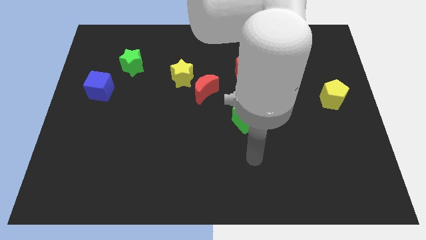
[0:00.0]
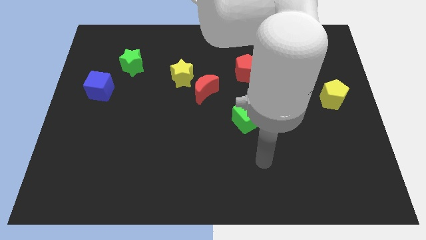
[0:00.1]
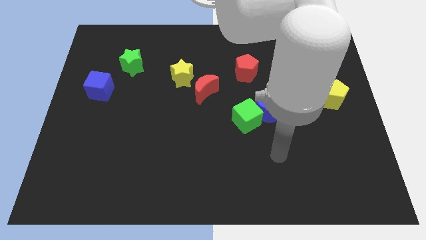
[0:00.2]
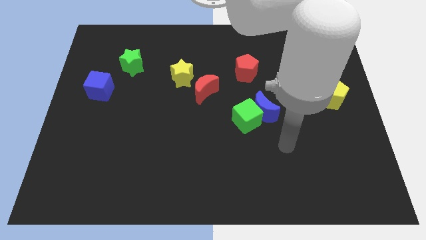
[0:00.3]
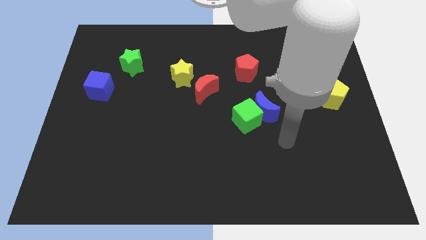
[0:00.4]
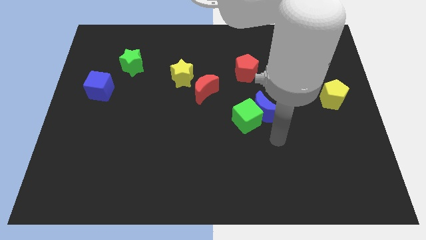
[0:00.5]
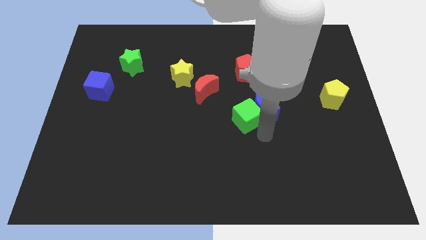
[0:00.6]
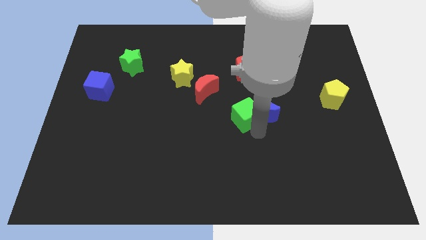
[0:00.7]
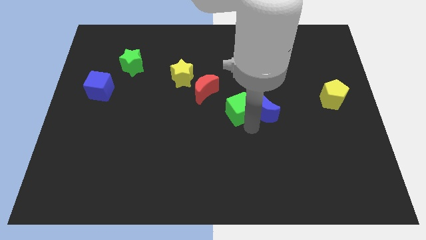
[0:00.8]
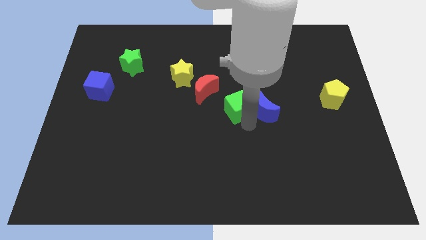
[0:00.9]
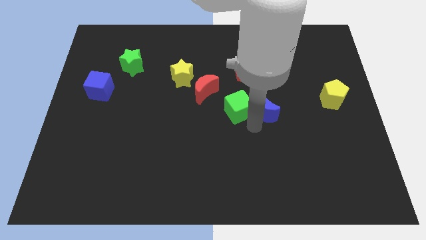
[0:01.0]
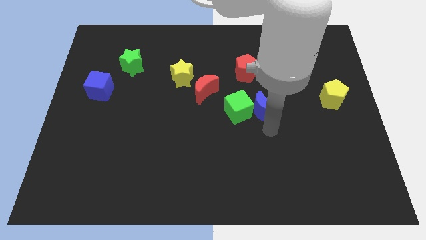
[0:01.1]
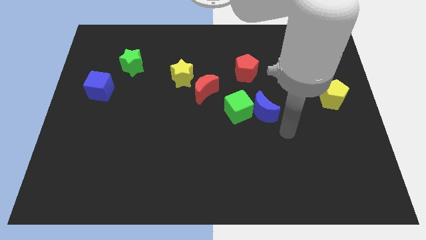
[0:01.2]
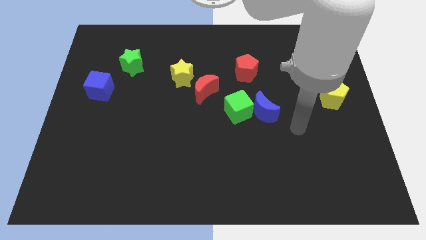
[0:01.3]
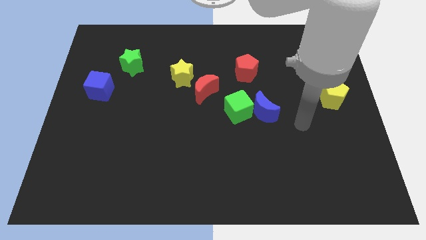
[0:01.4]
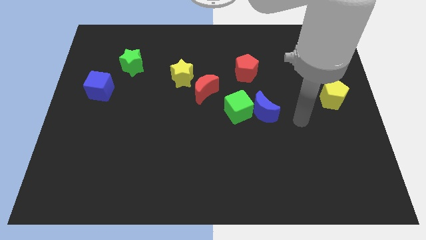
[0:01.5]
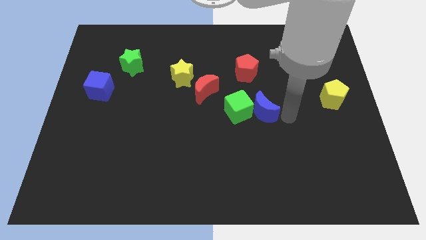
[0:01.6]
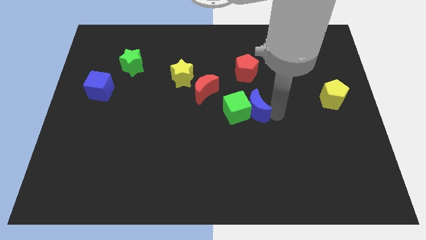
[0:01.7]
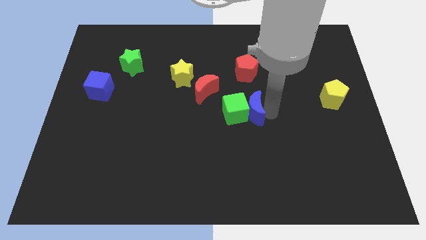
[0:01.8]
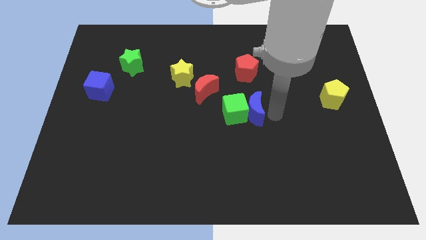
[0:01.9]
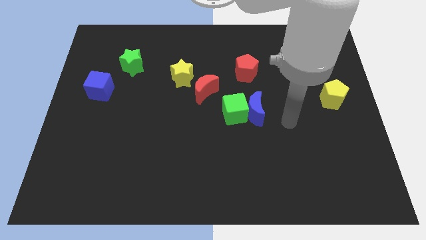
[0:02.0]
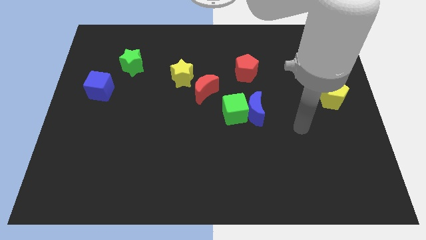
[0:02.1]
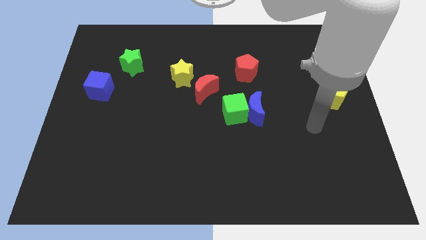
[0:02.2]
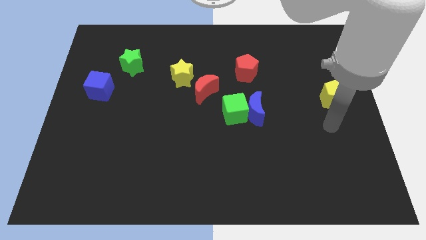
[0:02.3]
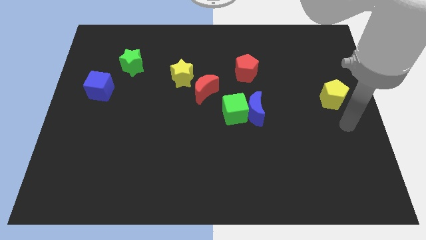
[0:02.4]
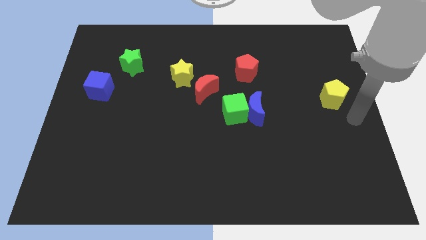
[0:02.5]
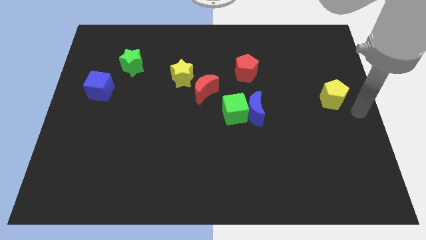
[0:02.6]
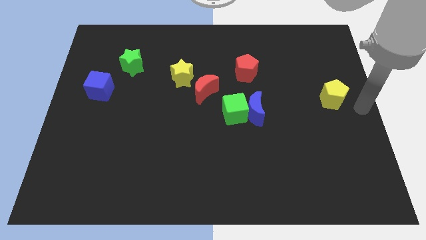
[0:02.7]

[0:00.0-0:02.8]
move green cube to the center

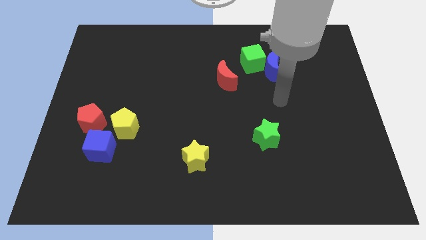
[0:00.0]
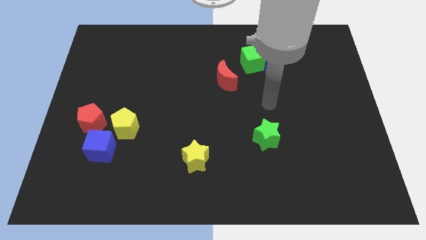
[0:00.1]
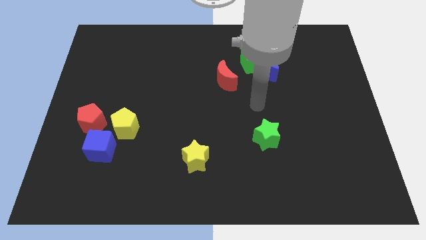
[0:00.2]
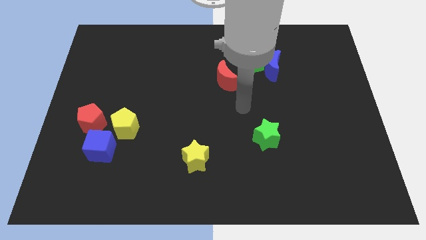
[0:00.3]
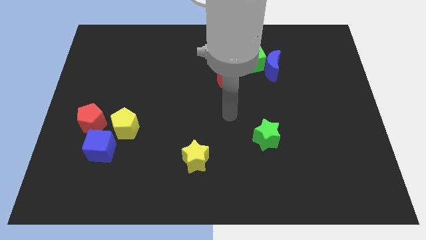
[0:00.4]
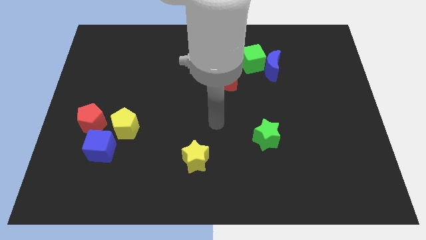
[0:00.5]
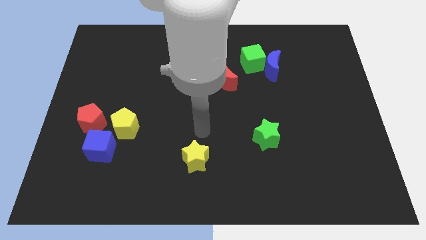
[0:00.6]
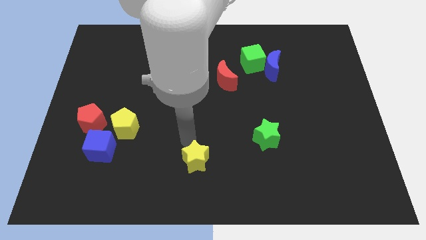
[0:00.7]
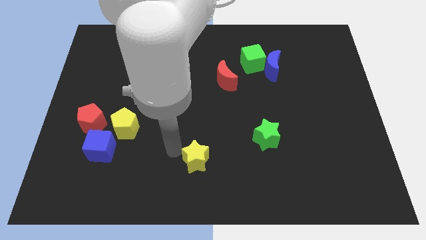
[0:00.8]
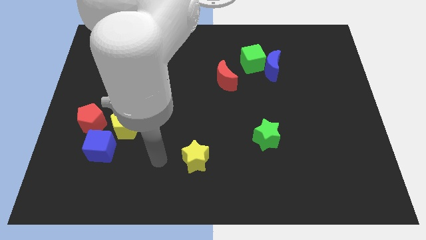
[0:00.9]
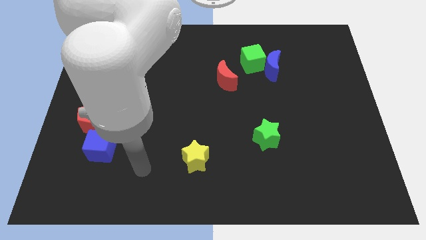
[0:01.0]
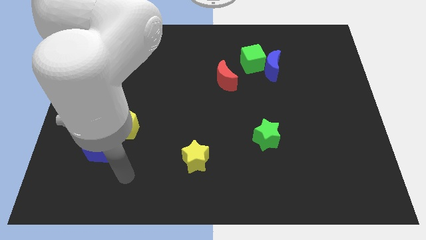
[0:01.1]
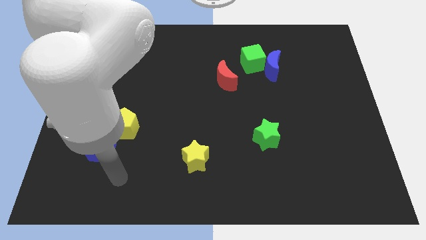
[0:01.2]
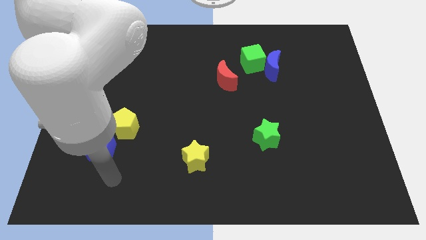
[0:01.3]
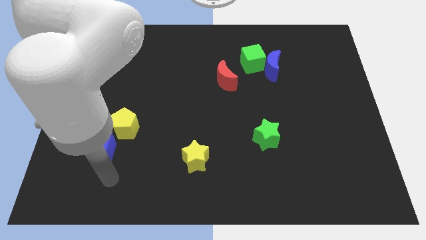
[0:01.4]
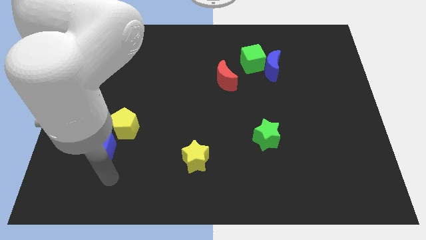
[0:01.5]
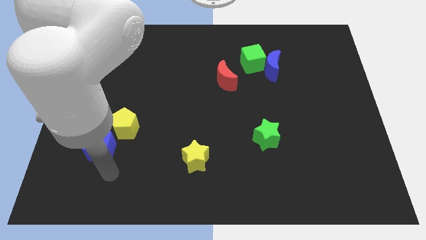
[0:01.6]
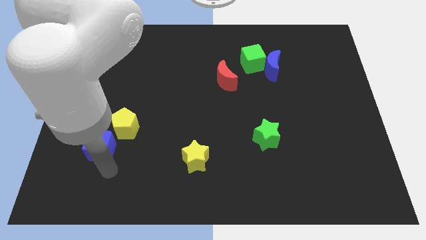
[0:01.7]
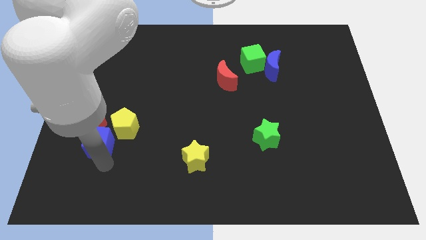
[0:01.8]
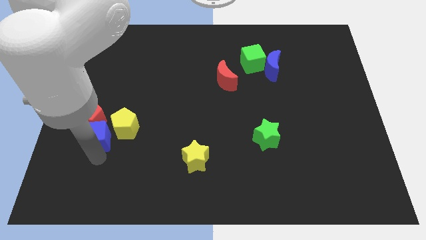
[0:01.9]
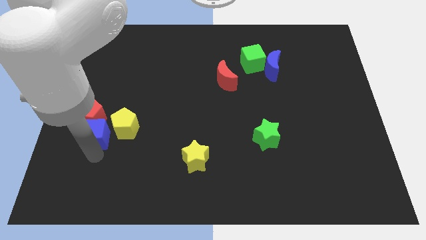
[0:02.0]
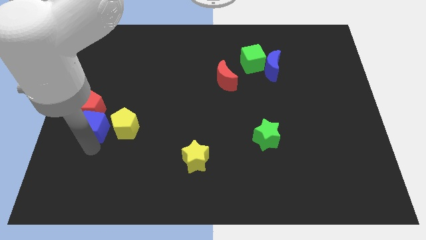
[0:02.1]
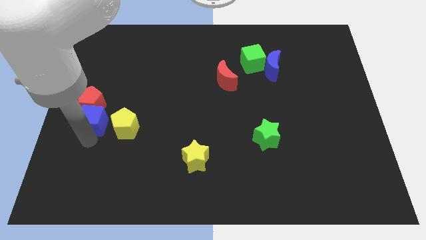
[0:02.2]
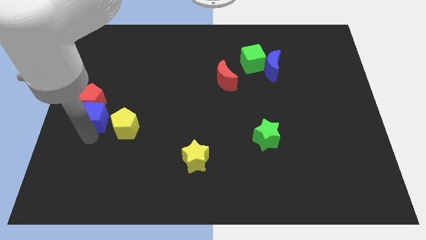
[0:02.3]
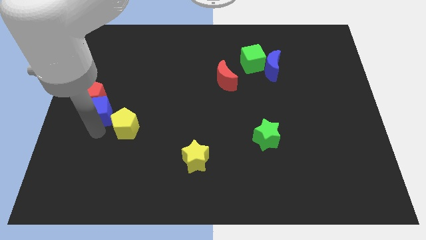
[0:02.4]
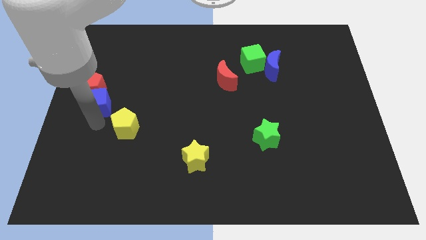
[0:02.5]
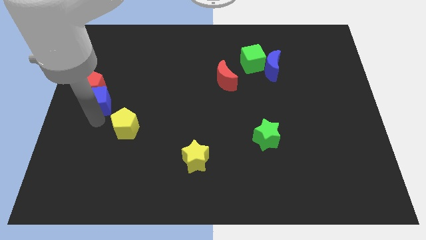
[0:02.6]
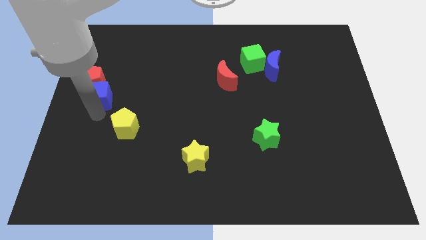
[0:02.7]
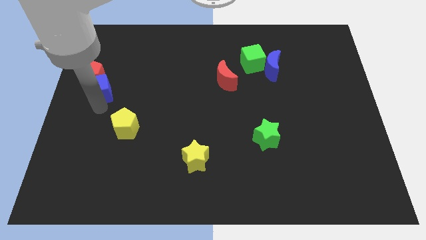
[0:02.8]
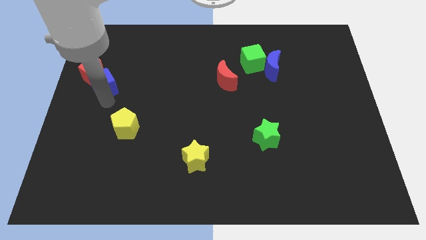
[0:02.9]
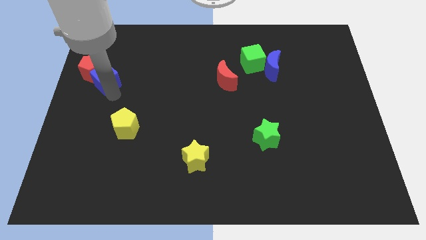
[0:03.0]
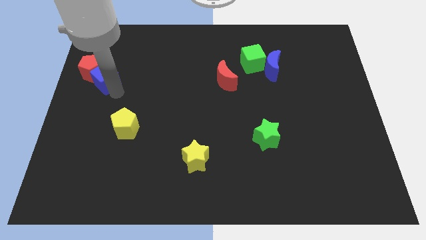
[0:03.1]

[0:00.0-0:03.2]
move the blue cube and red pentagon towards the top side of the board

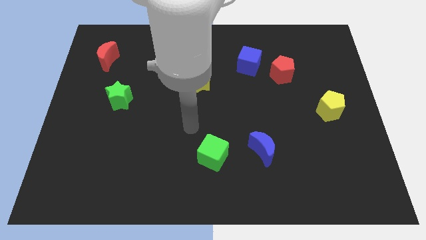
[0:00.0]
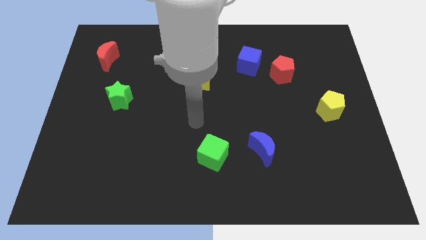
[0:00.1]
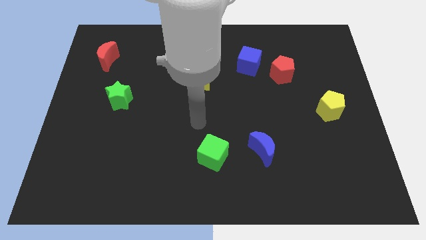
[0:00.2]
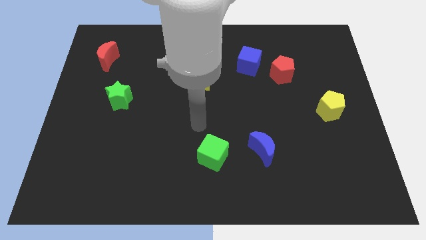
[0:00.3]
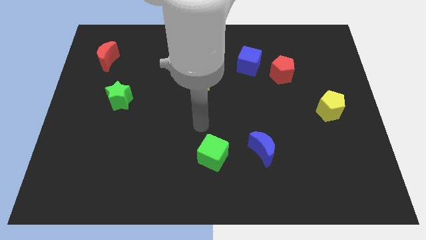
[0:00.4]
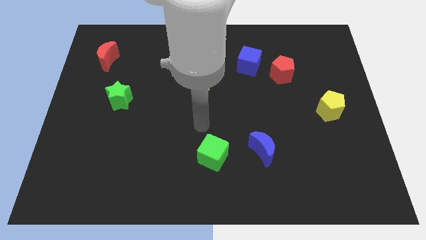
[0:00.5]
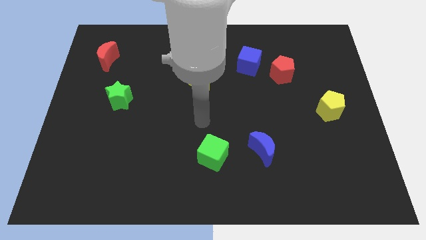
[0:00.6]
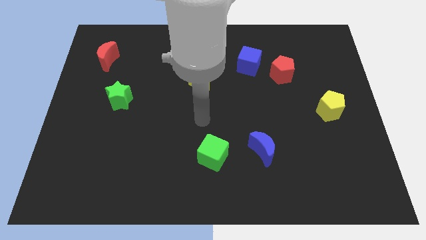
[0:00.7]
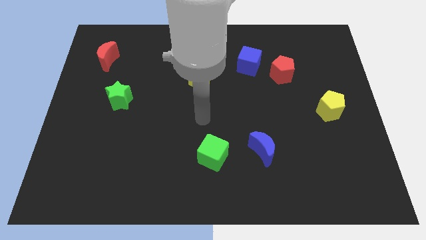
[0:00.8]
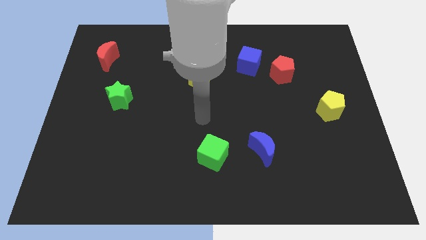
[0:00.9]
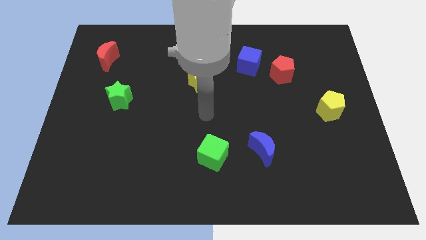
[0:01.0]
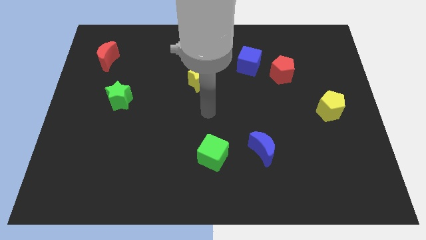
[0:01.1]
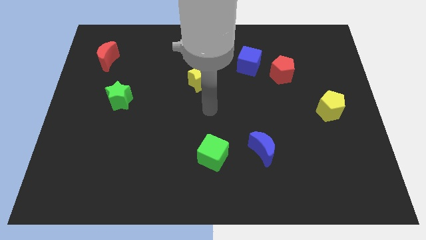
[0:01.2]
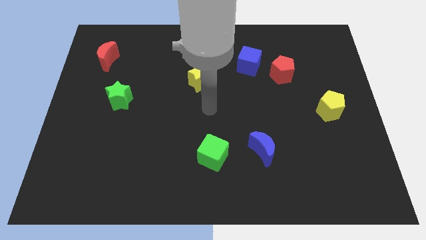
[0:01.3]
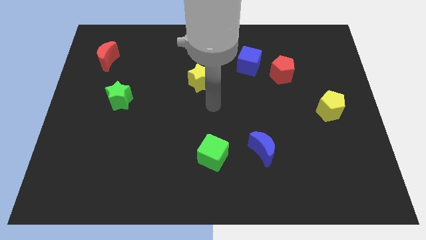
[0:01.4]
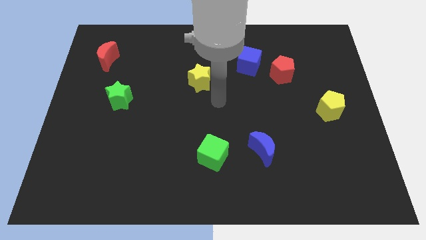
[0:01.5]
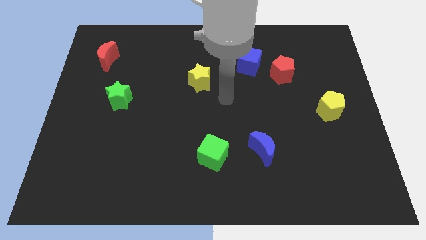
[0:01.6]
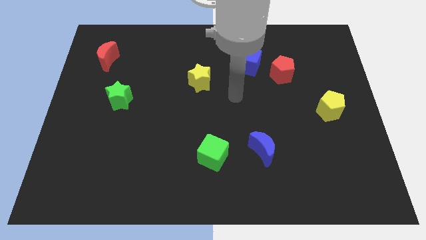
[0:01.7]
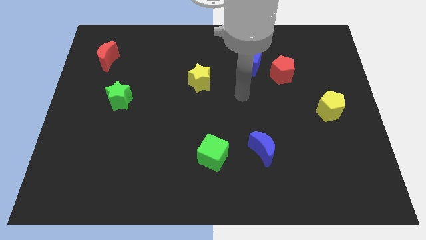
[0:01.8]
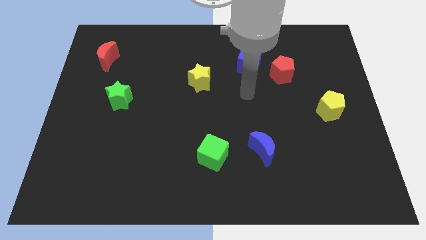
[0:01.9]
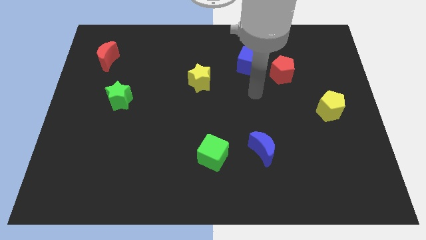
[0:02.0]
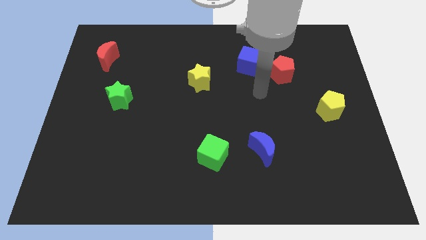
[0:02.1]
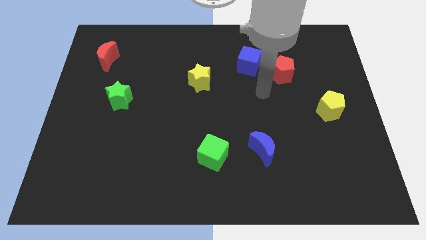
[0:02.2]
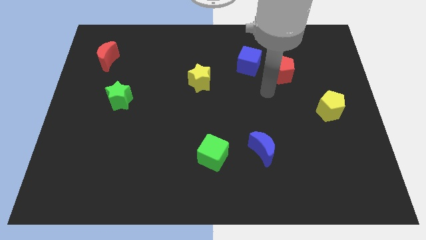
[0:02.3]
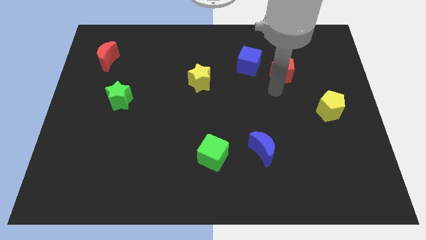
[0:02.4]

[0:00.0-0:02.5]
move the arm towards the red pentagon

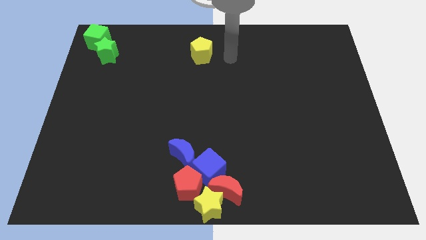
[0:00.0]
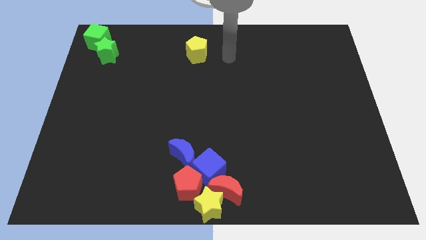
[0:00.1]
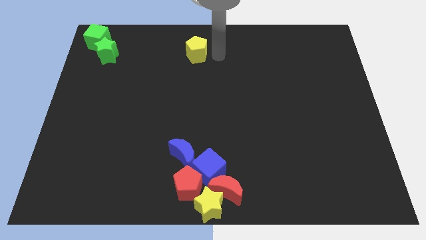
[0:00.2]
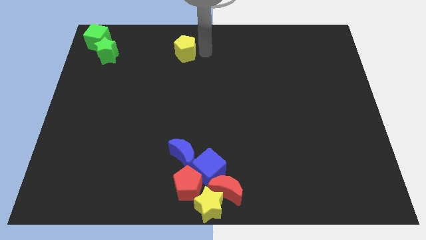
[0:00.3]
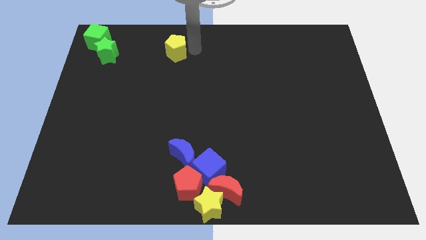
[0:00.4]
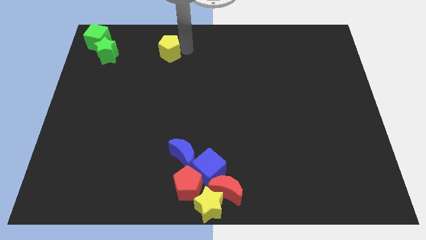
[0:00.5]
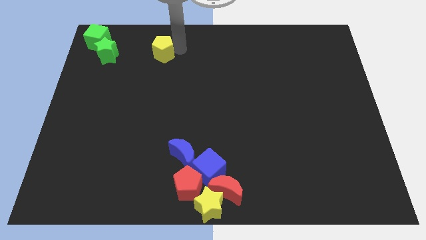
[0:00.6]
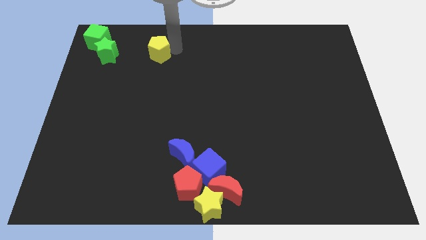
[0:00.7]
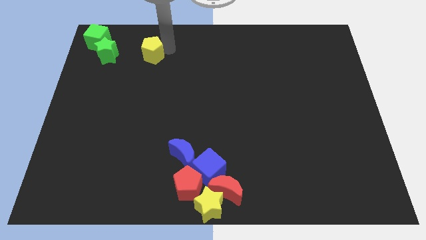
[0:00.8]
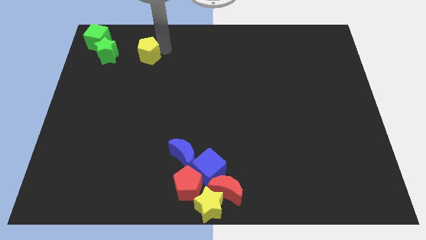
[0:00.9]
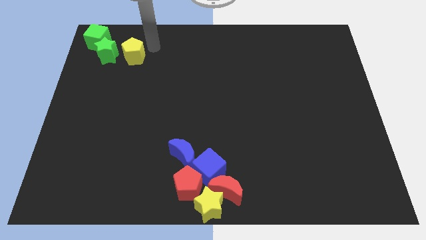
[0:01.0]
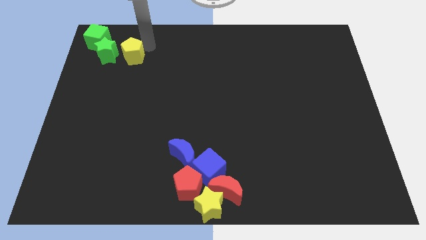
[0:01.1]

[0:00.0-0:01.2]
move the yellow pentagon to the right side of the green star
